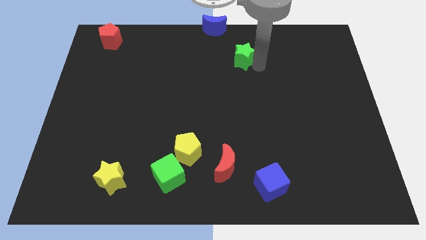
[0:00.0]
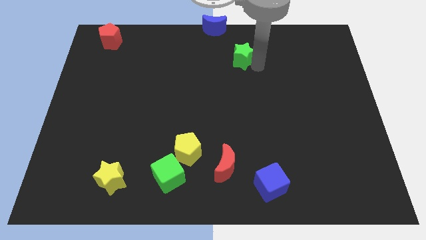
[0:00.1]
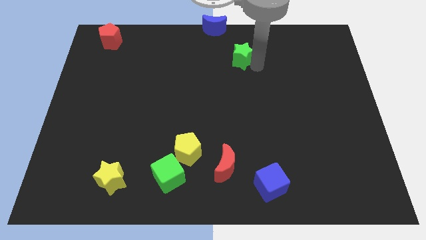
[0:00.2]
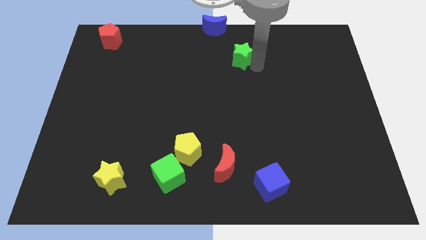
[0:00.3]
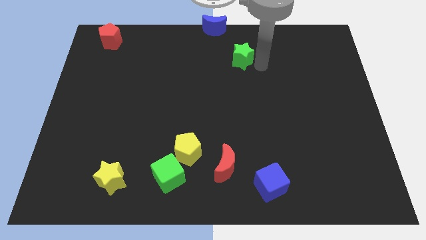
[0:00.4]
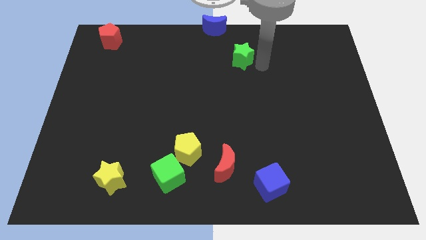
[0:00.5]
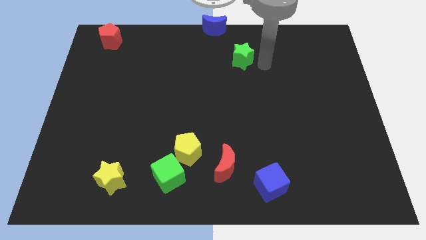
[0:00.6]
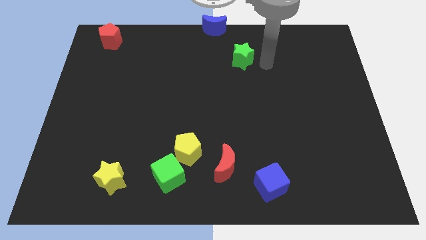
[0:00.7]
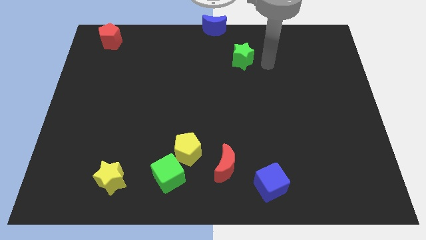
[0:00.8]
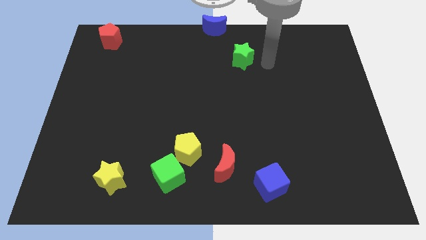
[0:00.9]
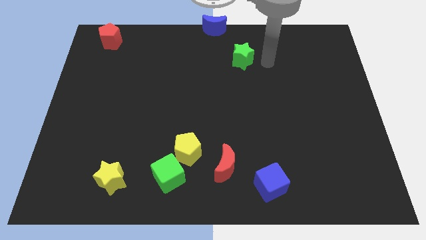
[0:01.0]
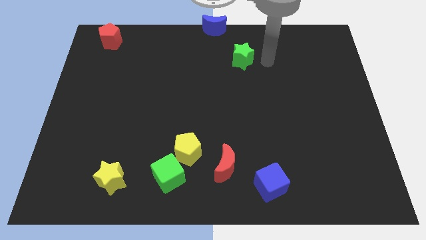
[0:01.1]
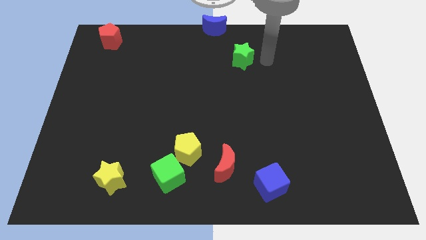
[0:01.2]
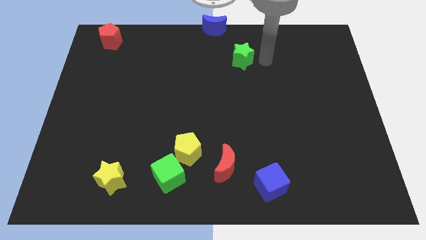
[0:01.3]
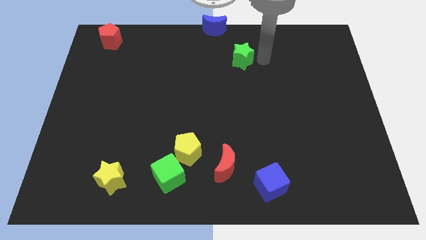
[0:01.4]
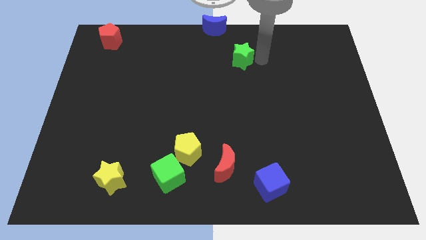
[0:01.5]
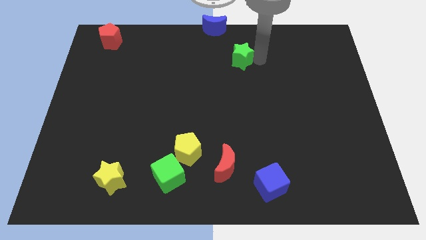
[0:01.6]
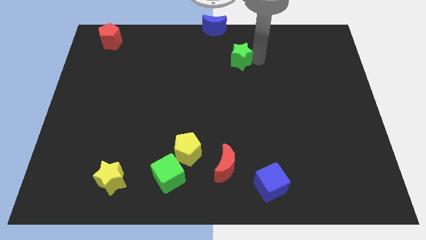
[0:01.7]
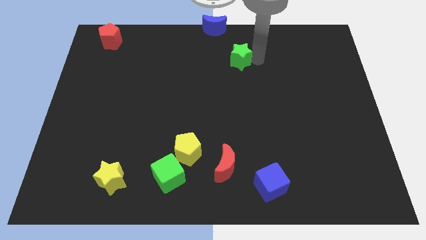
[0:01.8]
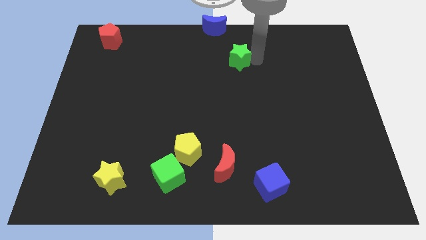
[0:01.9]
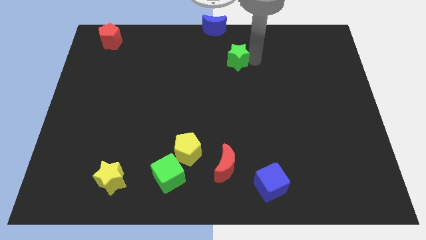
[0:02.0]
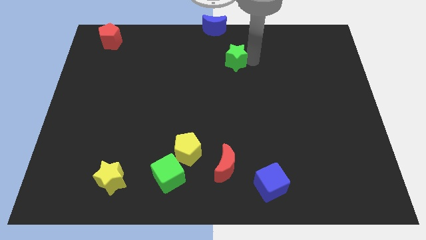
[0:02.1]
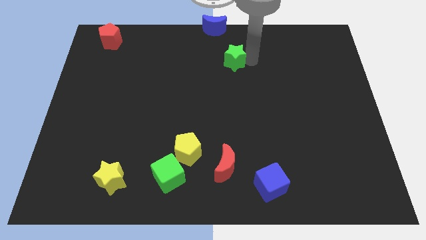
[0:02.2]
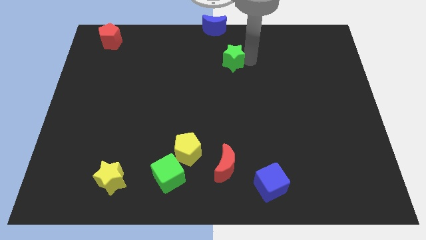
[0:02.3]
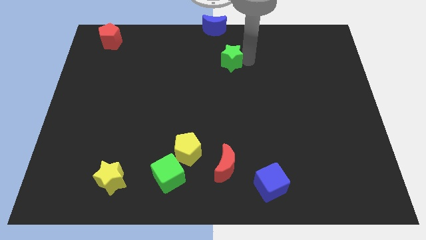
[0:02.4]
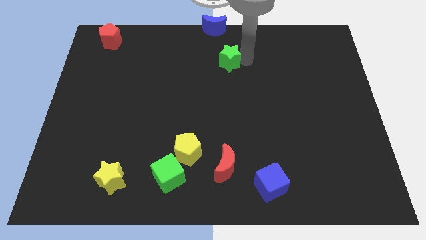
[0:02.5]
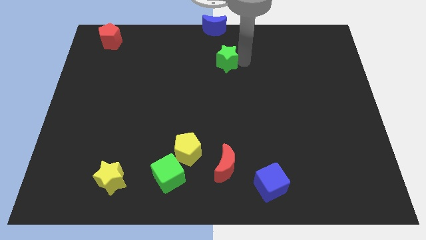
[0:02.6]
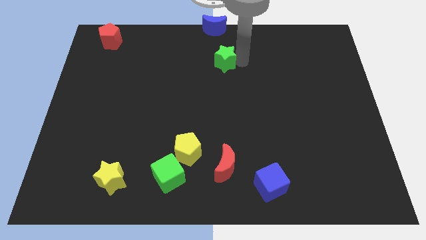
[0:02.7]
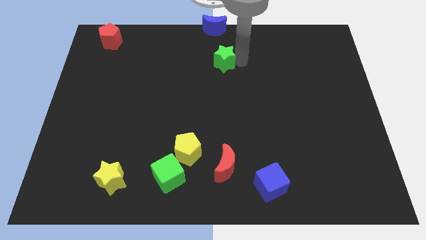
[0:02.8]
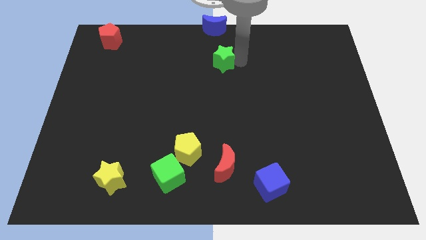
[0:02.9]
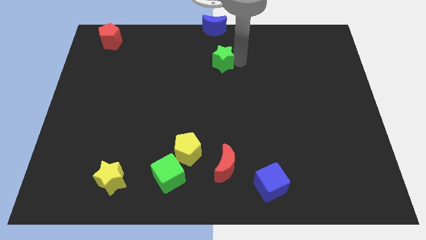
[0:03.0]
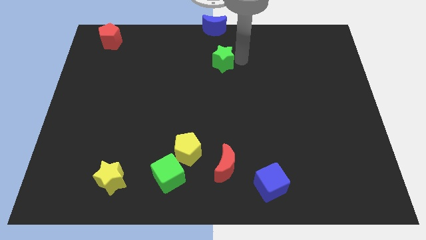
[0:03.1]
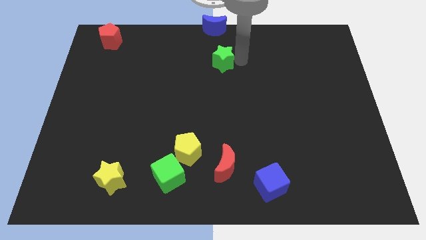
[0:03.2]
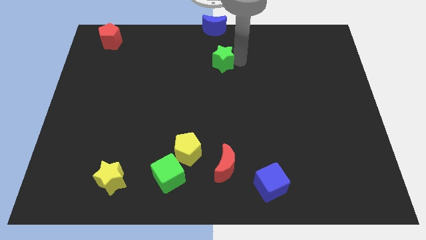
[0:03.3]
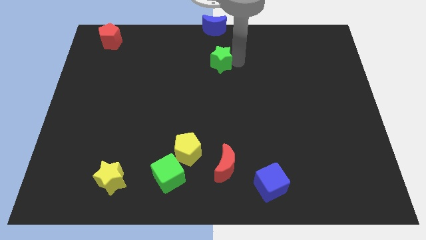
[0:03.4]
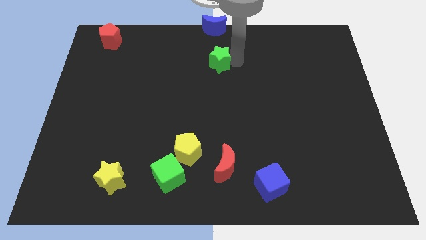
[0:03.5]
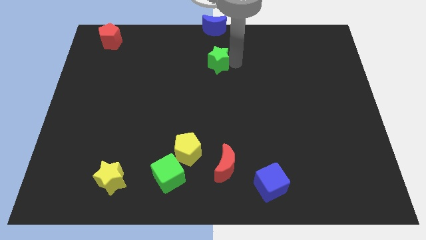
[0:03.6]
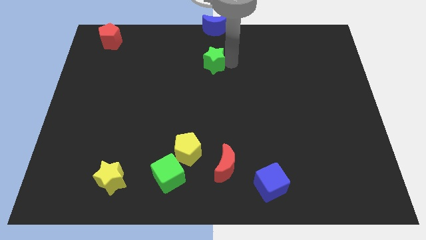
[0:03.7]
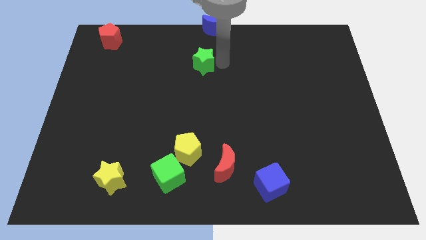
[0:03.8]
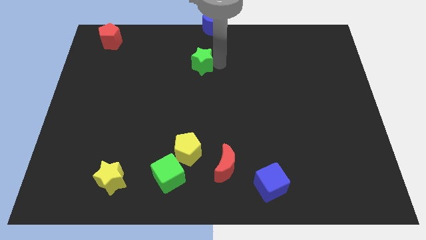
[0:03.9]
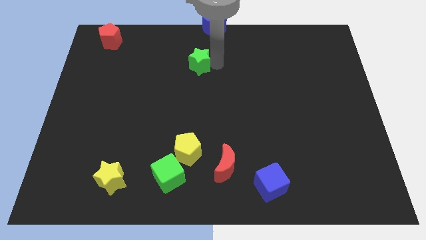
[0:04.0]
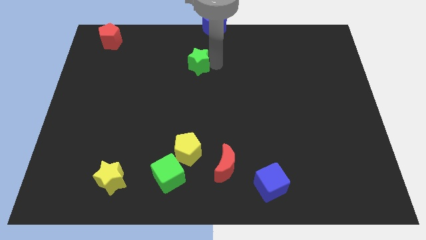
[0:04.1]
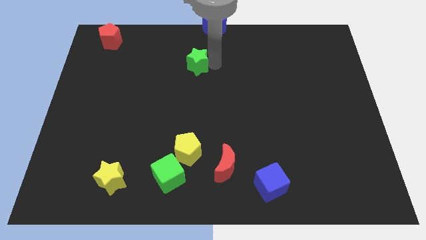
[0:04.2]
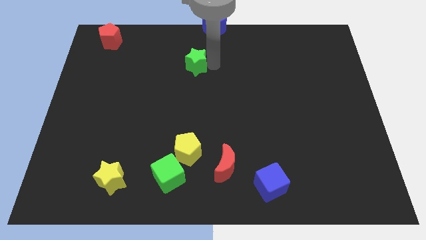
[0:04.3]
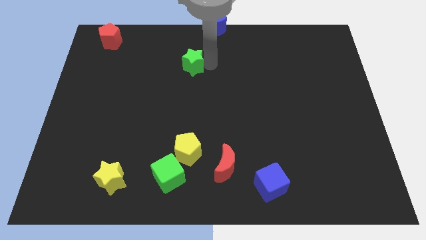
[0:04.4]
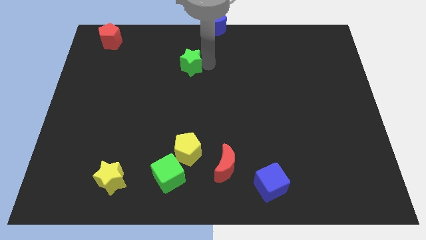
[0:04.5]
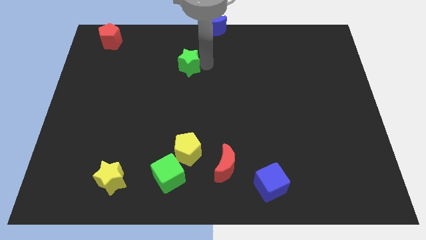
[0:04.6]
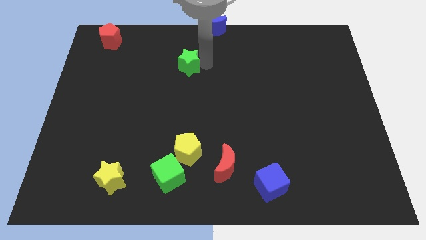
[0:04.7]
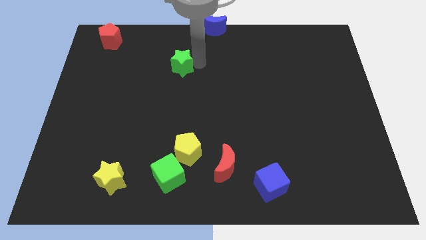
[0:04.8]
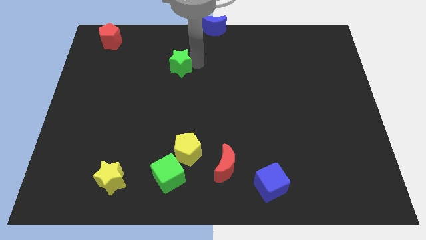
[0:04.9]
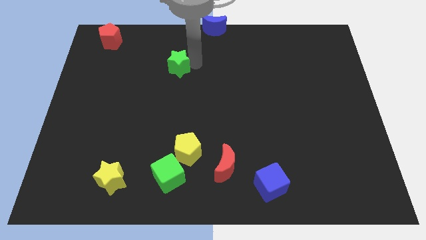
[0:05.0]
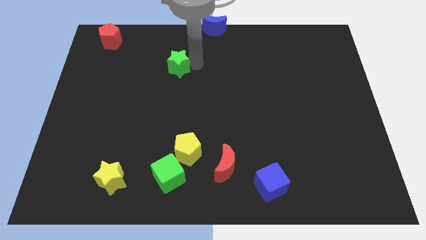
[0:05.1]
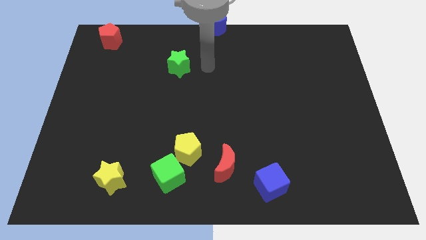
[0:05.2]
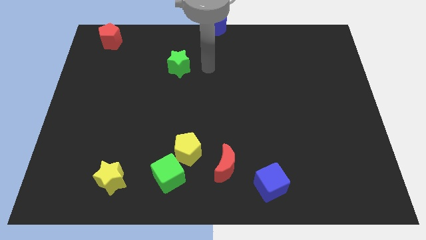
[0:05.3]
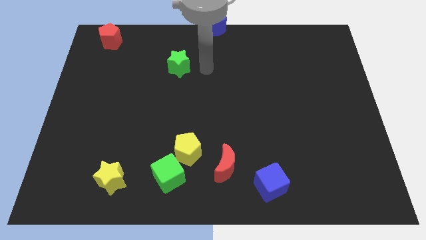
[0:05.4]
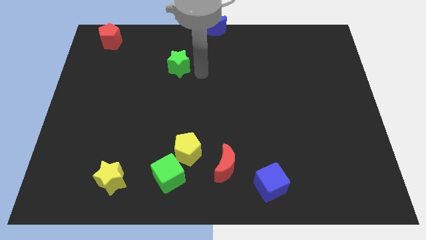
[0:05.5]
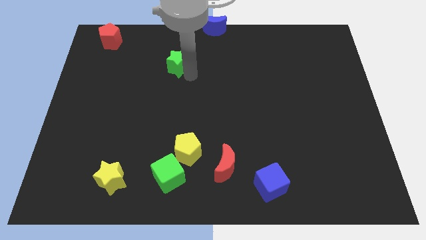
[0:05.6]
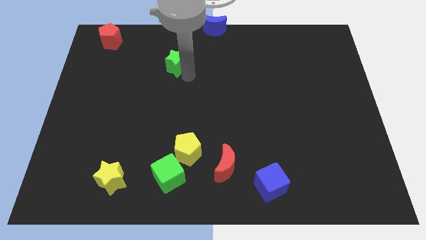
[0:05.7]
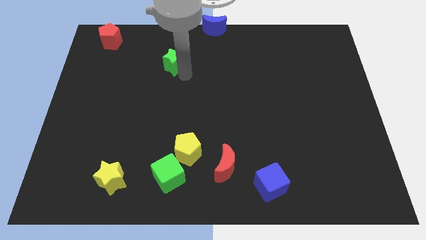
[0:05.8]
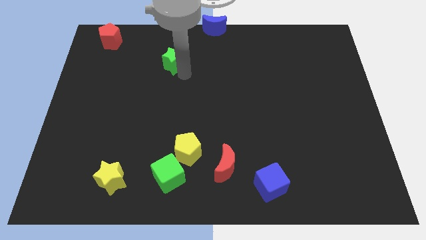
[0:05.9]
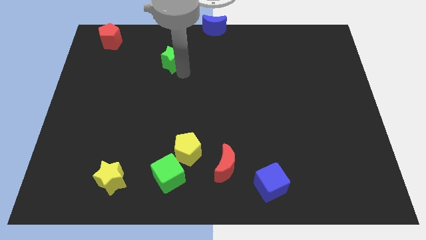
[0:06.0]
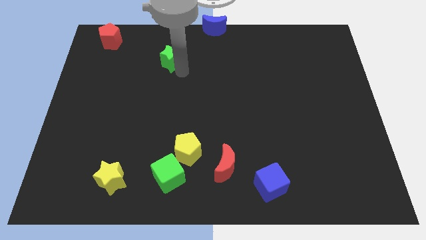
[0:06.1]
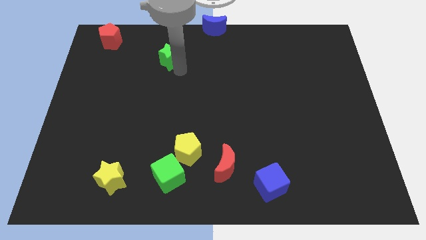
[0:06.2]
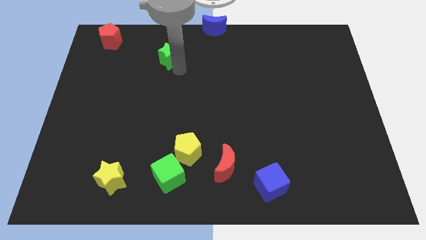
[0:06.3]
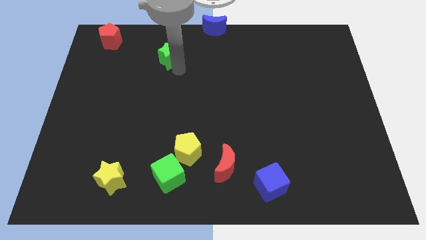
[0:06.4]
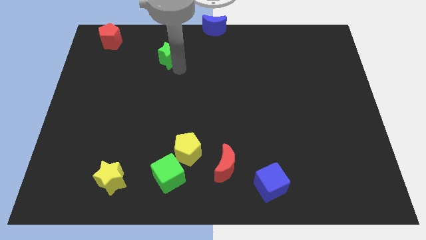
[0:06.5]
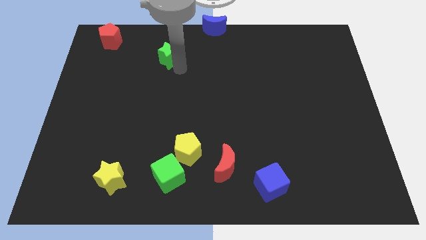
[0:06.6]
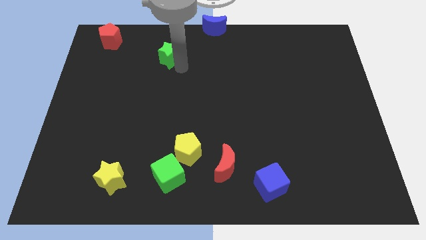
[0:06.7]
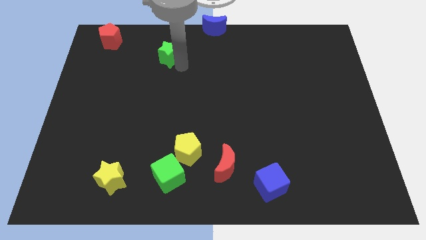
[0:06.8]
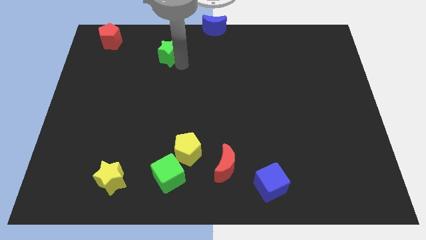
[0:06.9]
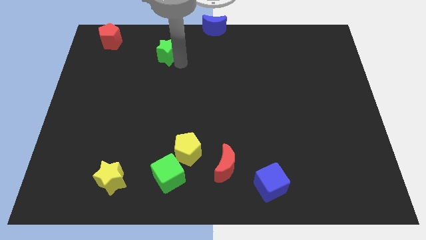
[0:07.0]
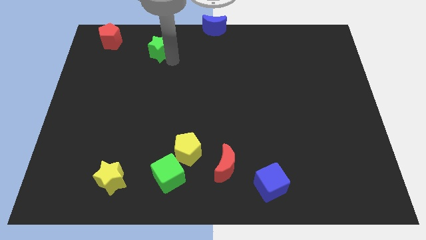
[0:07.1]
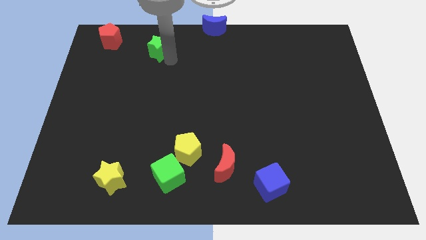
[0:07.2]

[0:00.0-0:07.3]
push the green star to the left side of the board

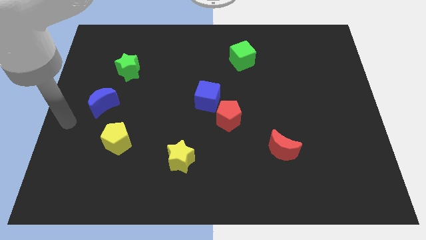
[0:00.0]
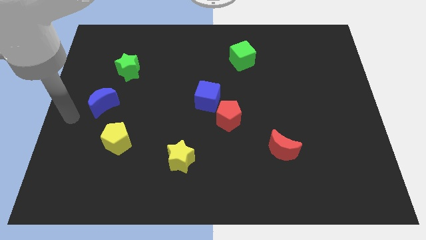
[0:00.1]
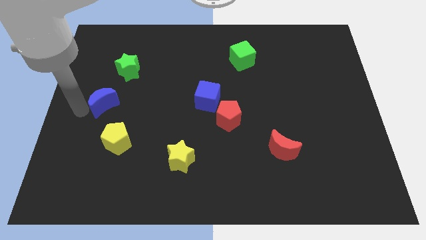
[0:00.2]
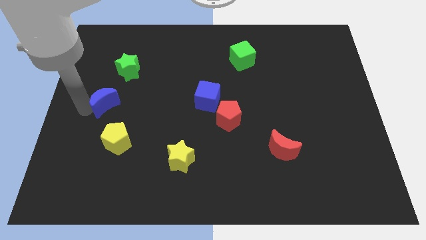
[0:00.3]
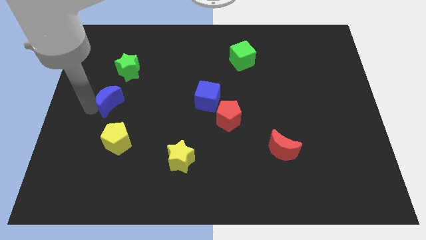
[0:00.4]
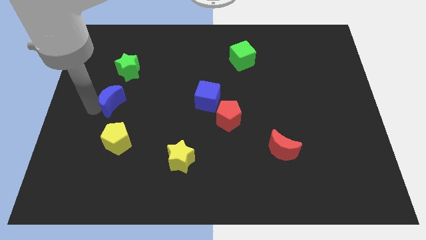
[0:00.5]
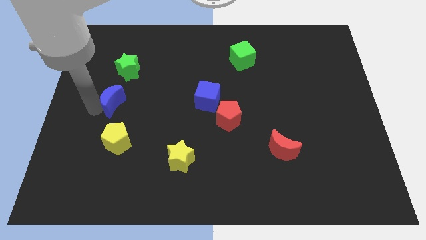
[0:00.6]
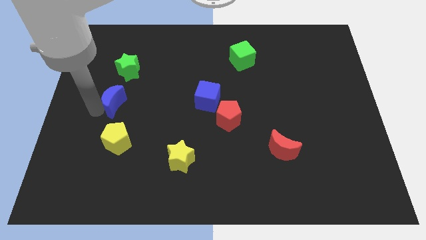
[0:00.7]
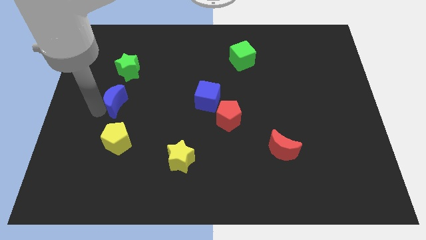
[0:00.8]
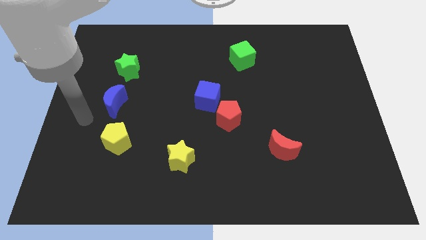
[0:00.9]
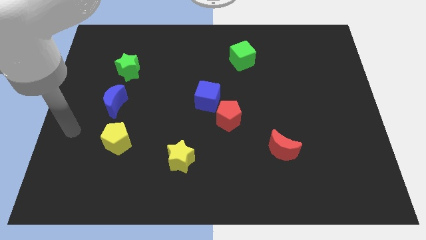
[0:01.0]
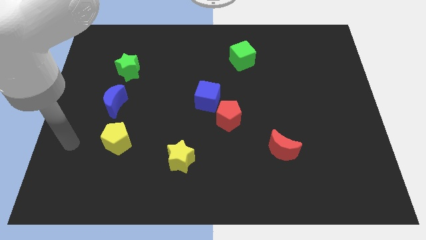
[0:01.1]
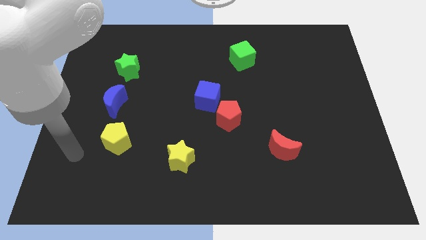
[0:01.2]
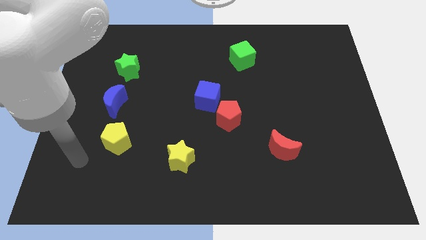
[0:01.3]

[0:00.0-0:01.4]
slightly push the blue crescent to the right of the board
